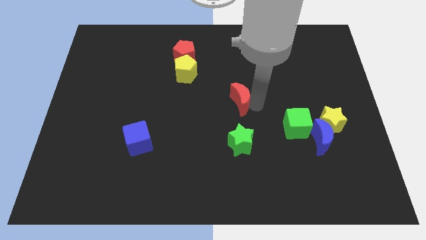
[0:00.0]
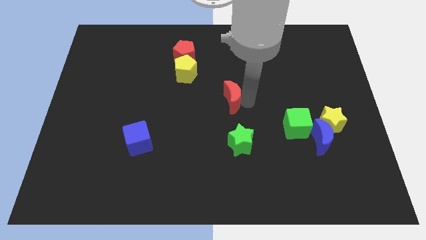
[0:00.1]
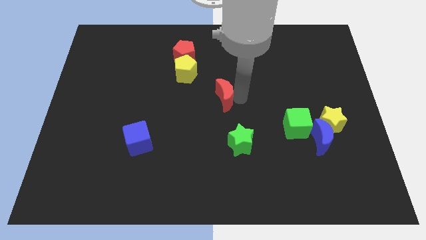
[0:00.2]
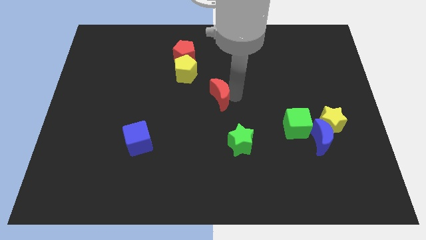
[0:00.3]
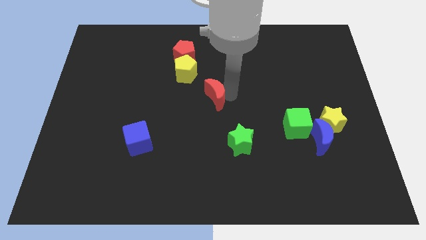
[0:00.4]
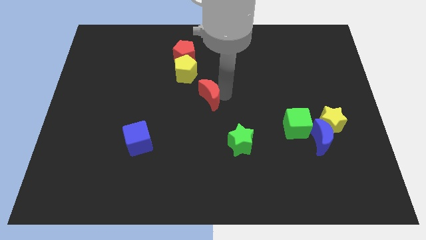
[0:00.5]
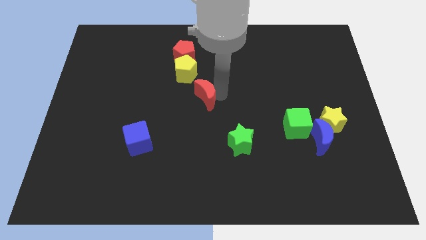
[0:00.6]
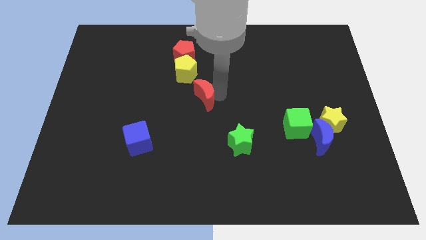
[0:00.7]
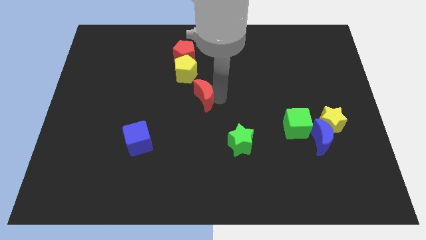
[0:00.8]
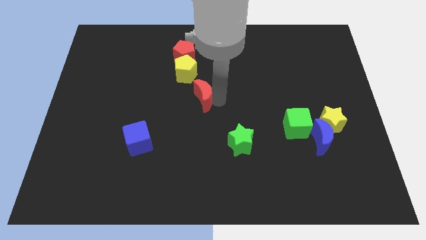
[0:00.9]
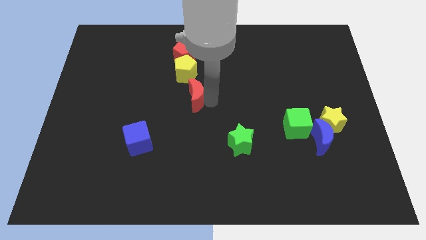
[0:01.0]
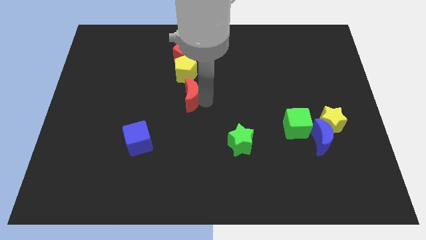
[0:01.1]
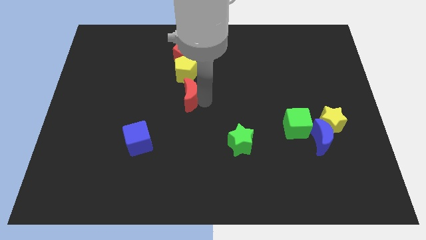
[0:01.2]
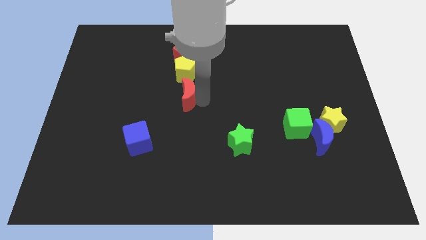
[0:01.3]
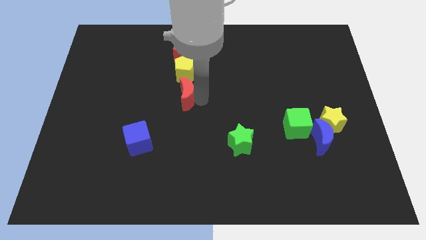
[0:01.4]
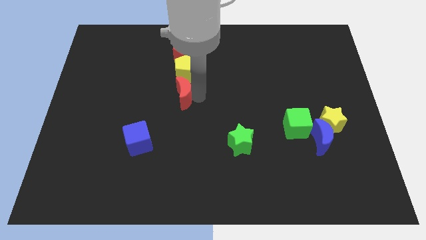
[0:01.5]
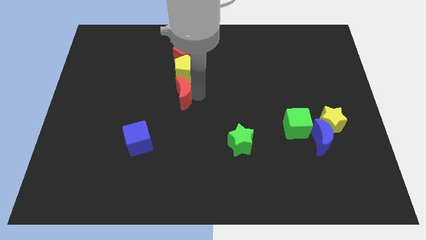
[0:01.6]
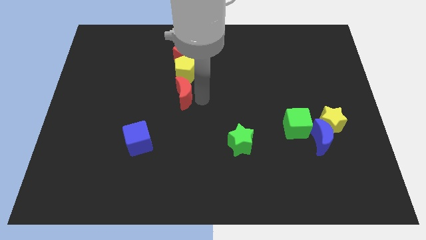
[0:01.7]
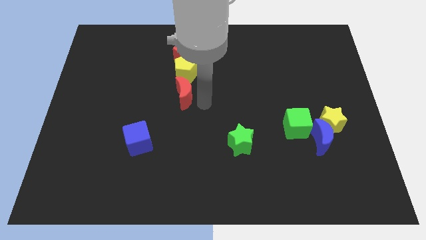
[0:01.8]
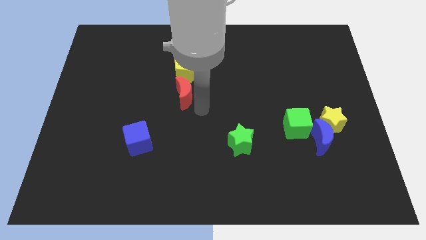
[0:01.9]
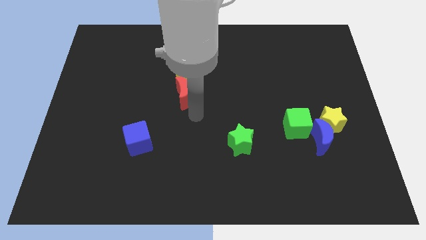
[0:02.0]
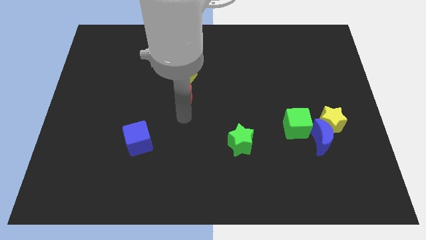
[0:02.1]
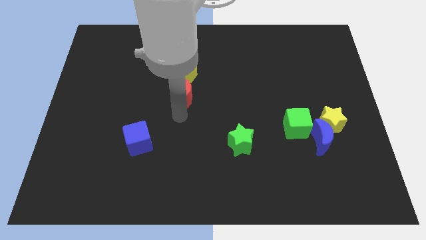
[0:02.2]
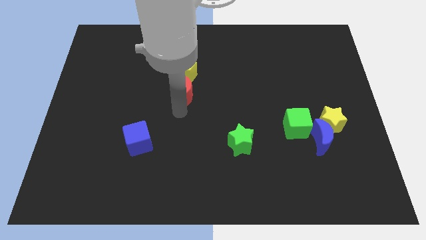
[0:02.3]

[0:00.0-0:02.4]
push red crescent below yellow pentagon

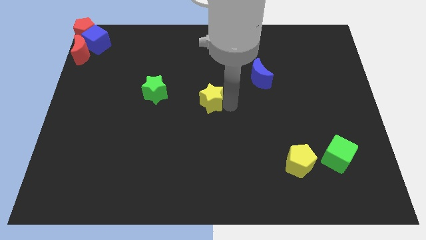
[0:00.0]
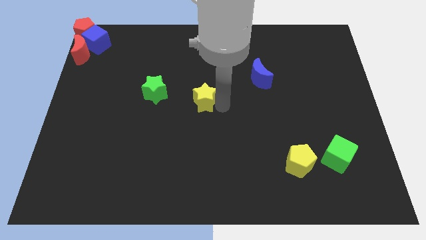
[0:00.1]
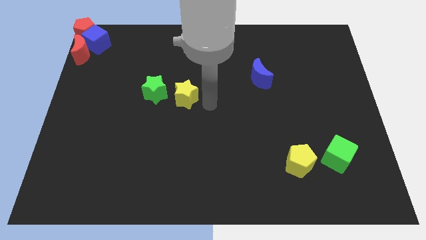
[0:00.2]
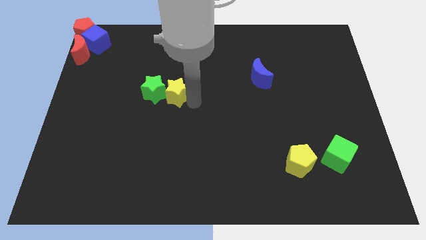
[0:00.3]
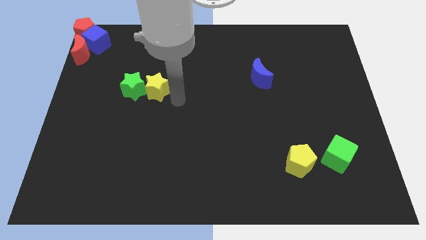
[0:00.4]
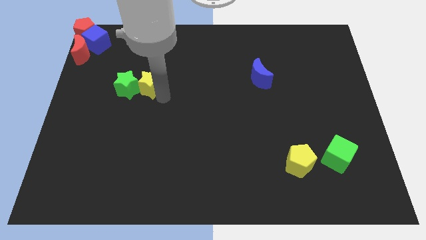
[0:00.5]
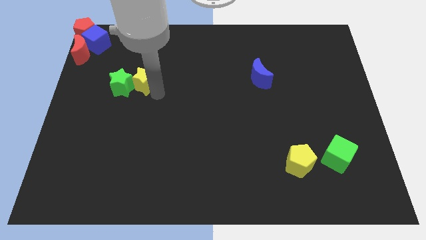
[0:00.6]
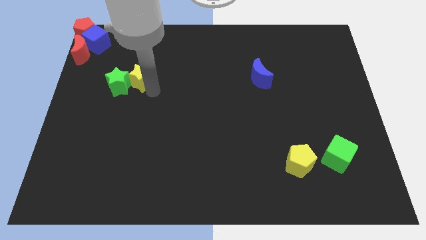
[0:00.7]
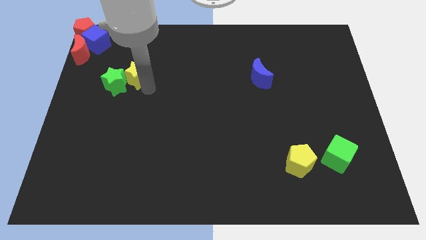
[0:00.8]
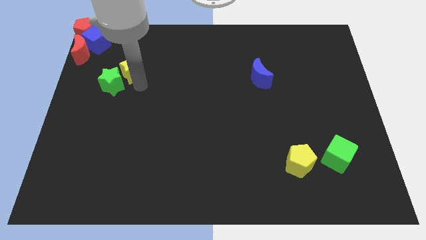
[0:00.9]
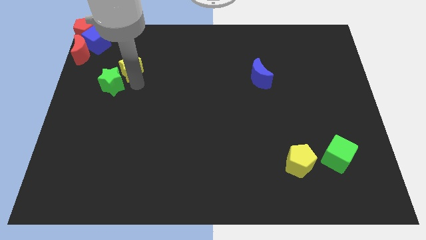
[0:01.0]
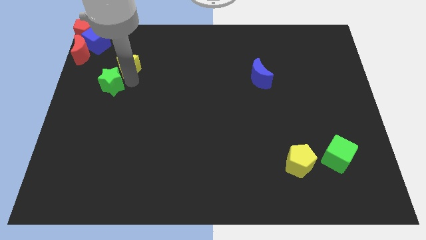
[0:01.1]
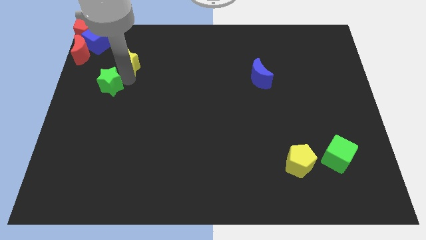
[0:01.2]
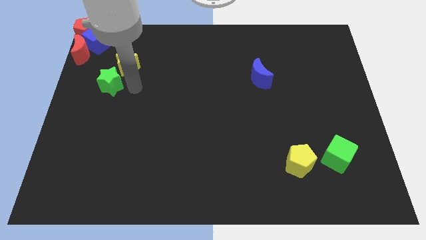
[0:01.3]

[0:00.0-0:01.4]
move green star with yellow star

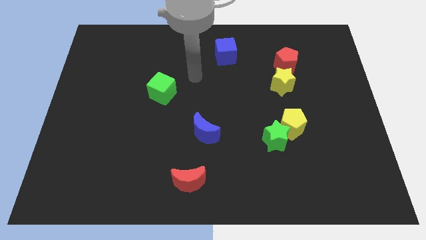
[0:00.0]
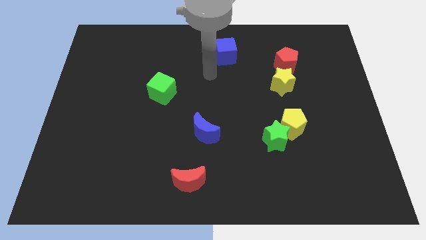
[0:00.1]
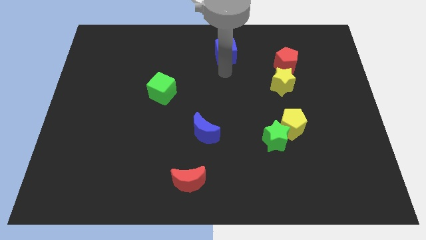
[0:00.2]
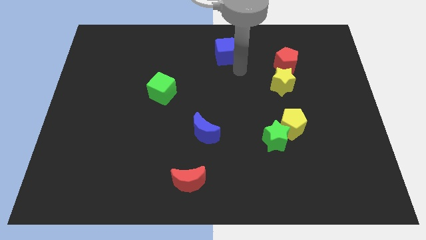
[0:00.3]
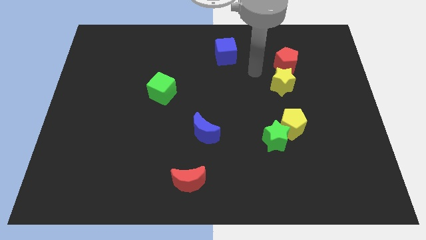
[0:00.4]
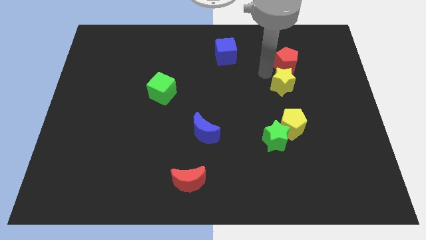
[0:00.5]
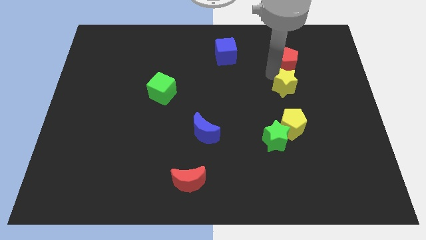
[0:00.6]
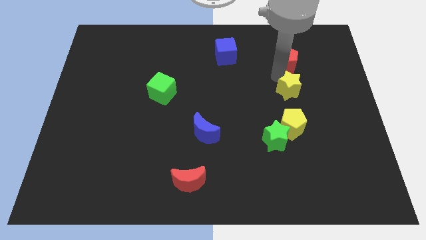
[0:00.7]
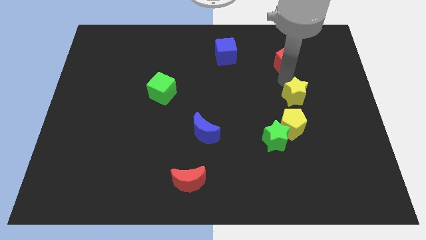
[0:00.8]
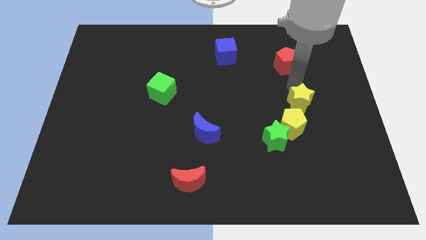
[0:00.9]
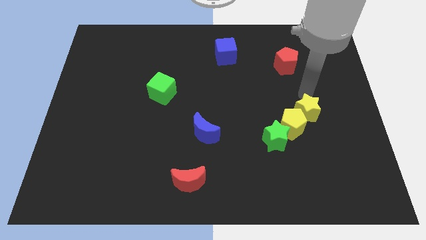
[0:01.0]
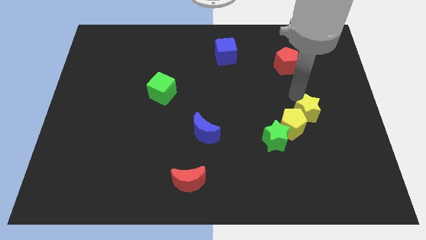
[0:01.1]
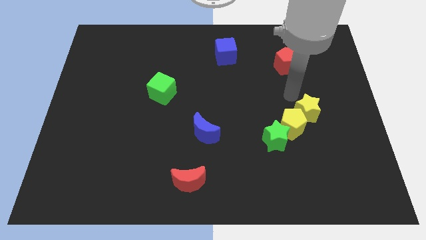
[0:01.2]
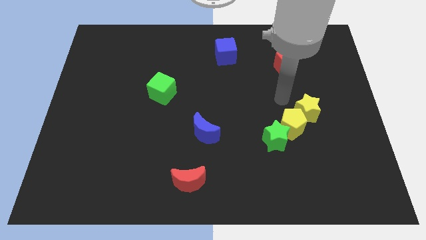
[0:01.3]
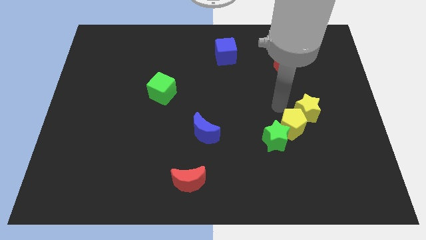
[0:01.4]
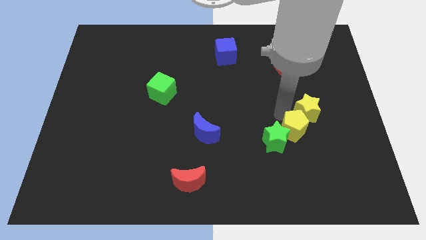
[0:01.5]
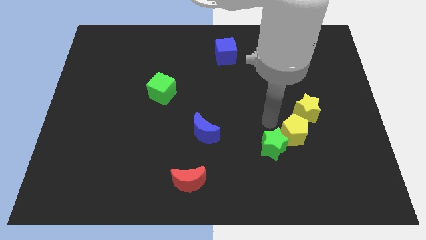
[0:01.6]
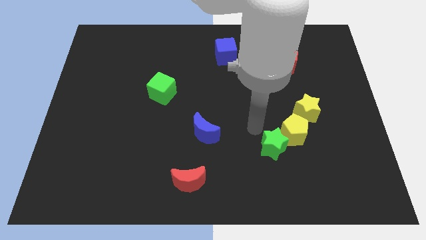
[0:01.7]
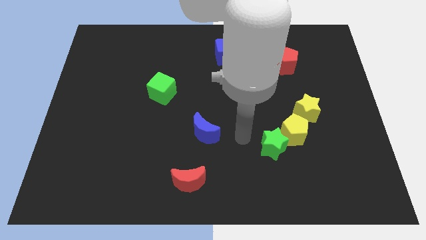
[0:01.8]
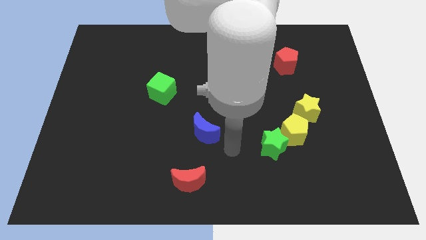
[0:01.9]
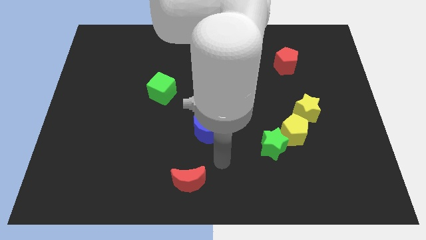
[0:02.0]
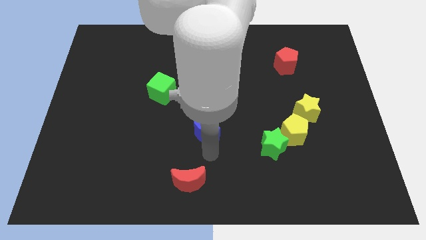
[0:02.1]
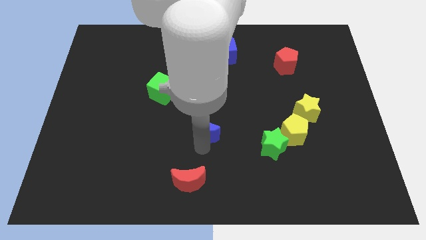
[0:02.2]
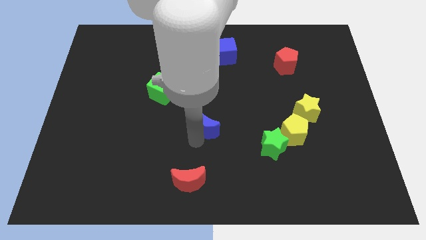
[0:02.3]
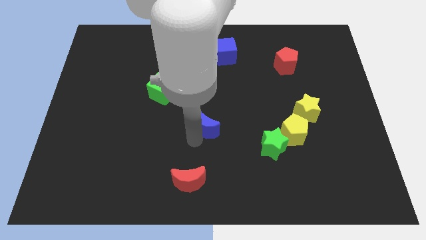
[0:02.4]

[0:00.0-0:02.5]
push the yellow star close to the yellow pentagon

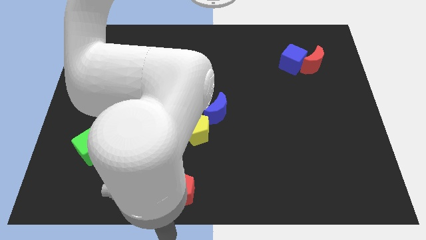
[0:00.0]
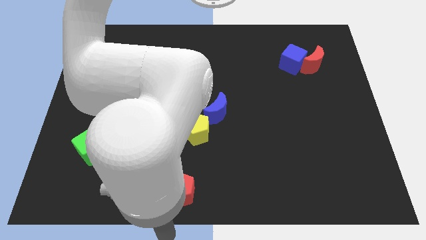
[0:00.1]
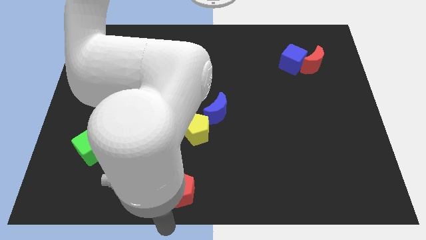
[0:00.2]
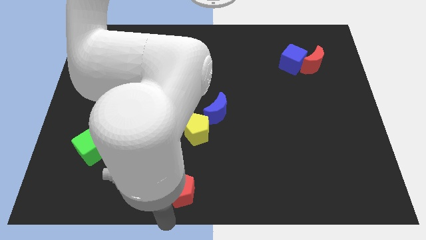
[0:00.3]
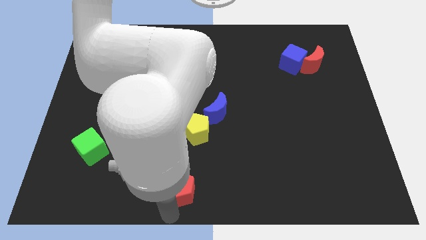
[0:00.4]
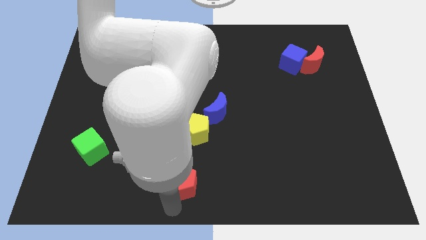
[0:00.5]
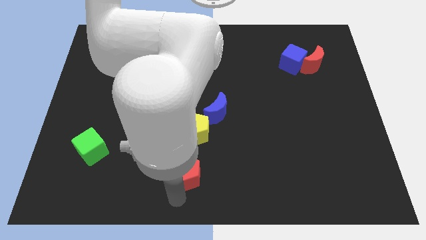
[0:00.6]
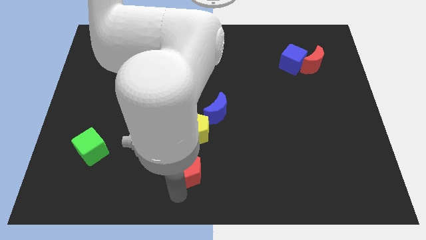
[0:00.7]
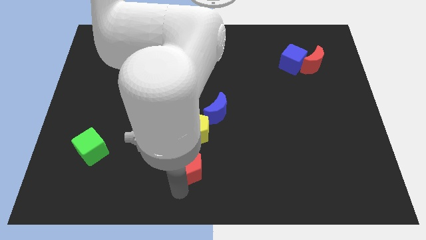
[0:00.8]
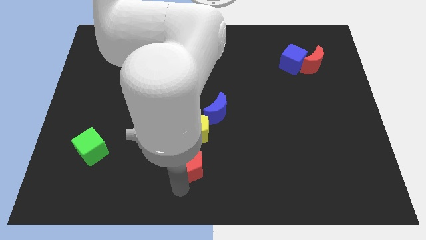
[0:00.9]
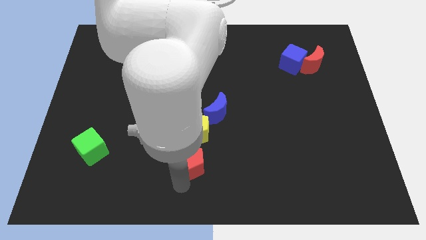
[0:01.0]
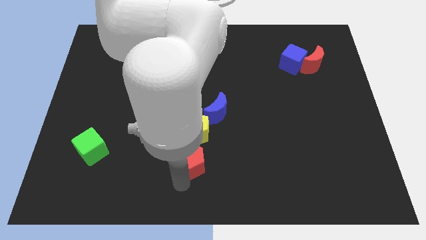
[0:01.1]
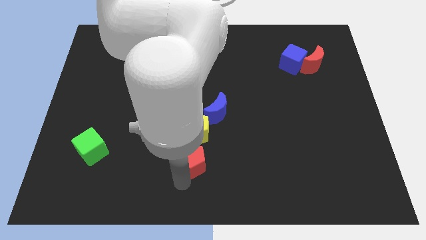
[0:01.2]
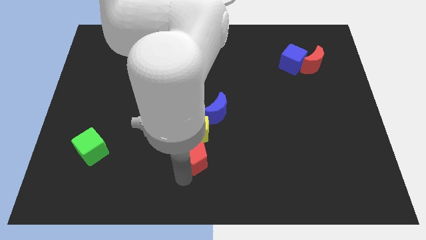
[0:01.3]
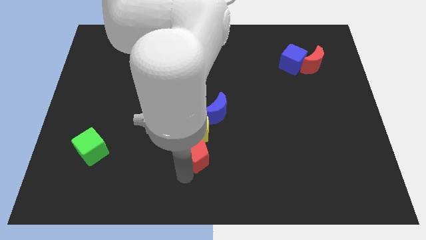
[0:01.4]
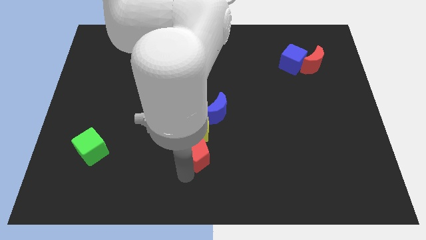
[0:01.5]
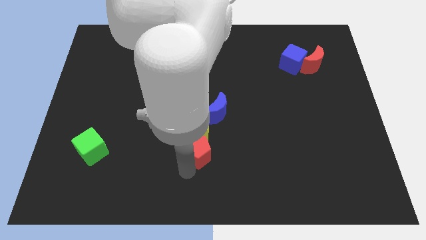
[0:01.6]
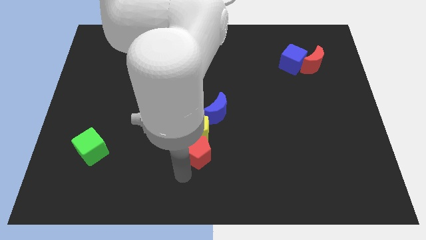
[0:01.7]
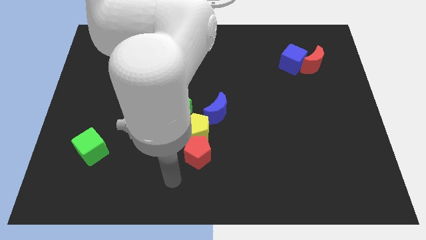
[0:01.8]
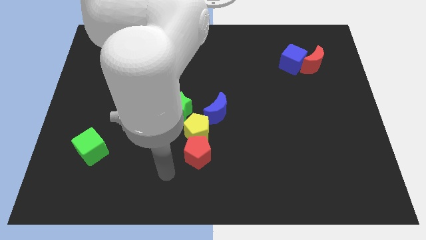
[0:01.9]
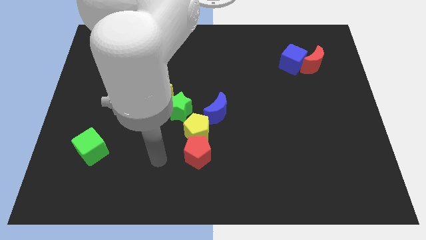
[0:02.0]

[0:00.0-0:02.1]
place red pentagon below the yellow pentagon

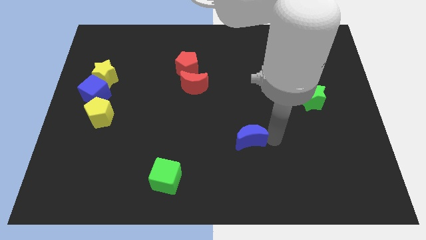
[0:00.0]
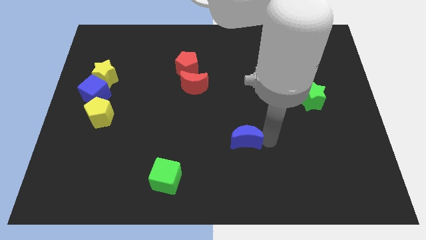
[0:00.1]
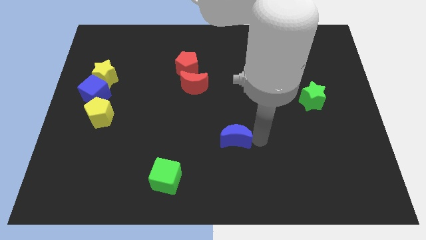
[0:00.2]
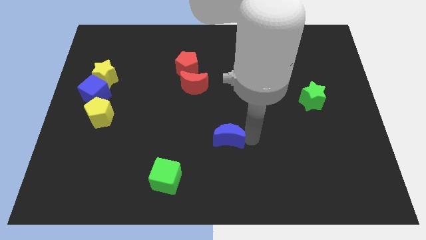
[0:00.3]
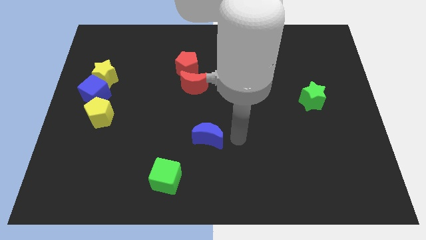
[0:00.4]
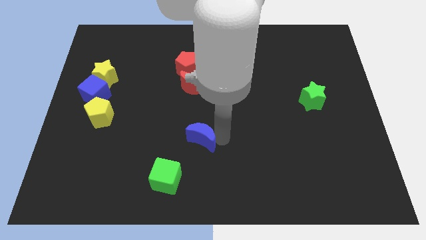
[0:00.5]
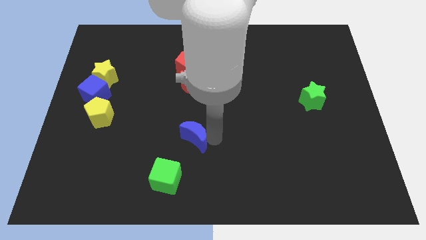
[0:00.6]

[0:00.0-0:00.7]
push the blue moon diagonally top right to the green cube
